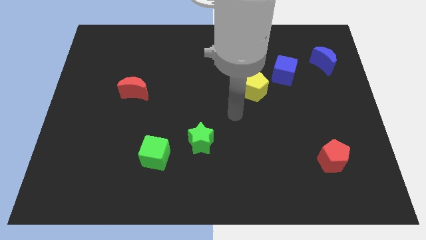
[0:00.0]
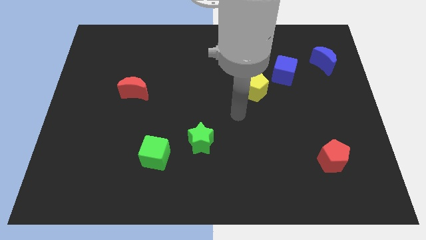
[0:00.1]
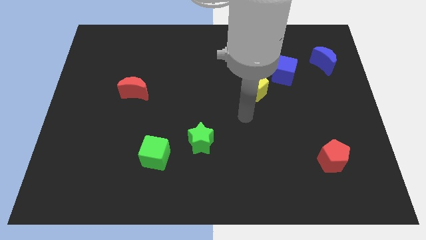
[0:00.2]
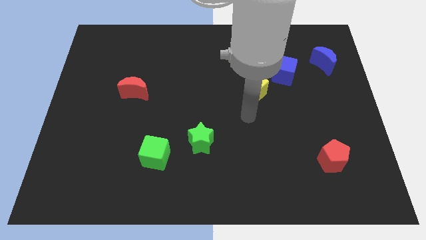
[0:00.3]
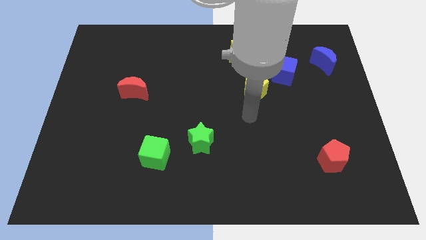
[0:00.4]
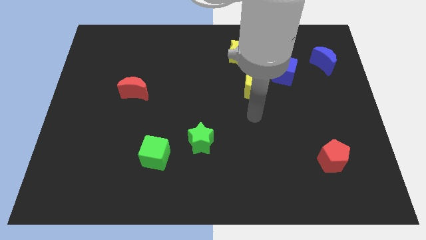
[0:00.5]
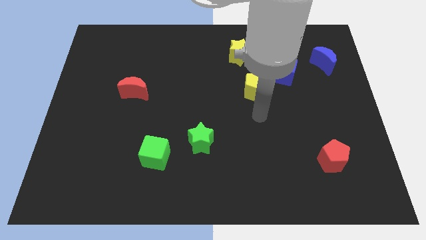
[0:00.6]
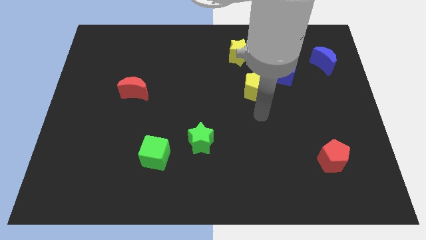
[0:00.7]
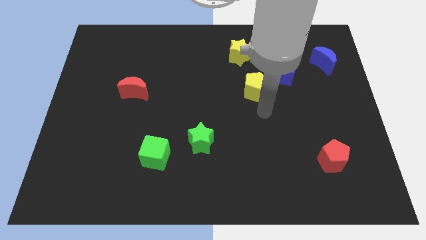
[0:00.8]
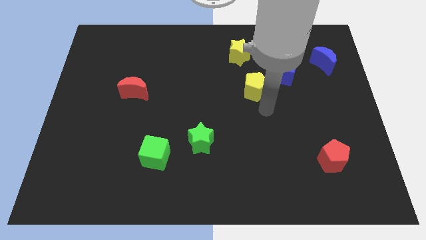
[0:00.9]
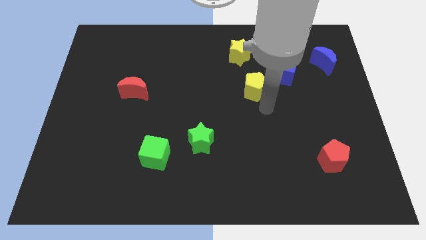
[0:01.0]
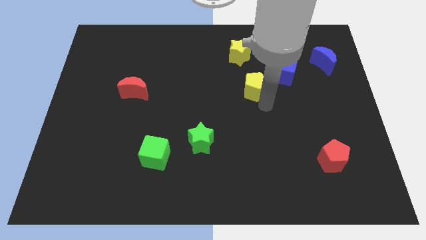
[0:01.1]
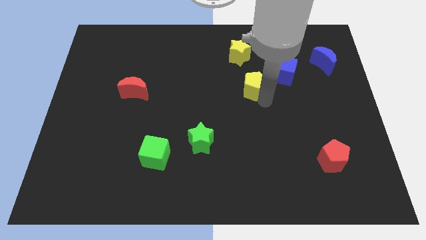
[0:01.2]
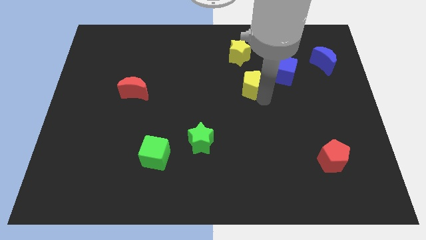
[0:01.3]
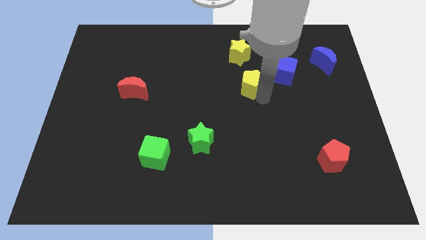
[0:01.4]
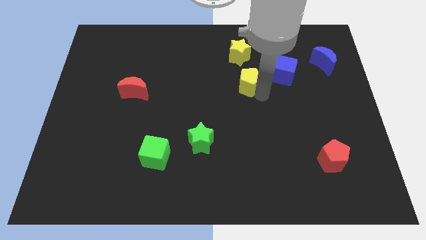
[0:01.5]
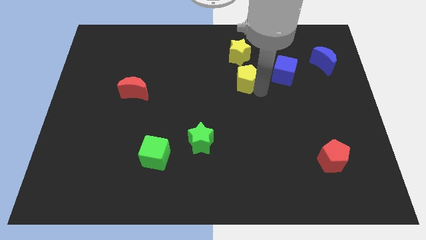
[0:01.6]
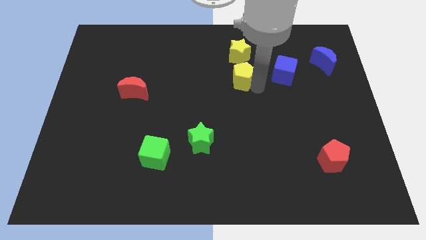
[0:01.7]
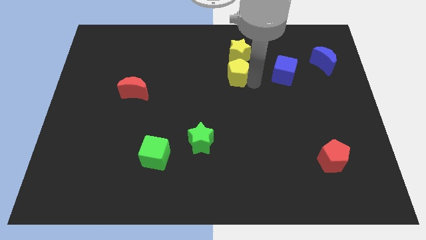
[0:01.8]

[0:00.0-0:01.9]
push yellow pentagon to the bottom of the yellow star

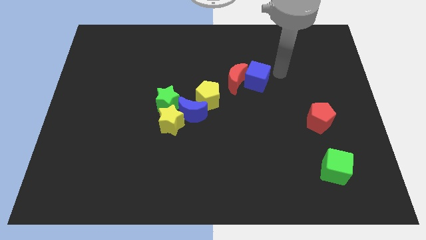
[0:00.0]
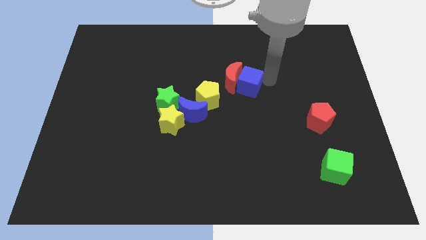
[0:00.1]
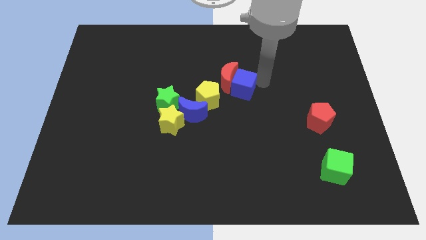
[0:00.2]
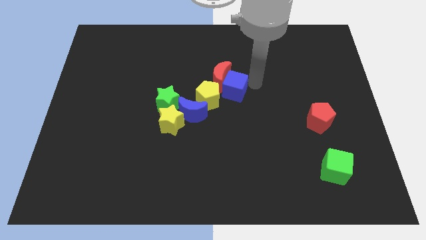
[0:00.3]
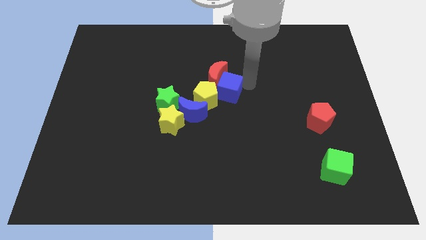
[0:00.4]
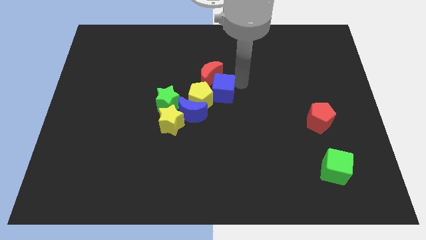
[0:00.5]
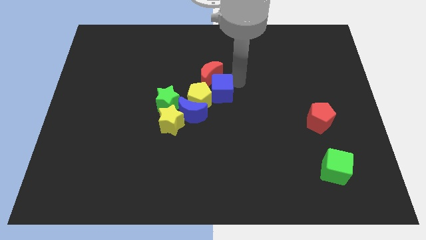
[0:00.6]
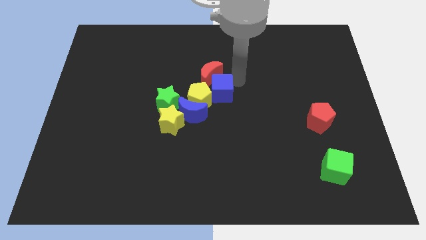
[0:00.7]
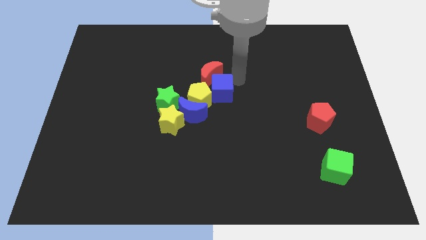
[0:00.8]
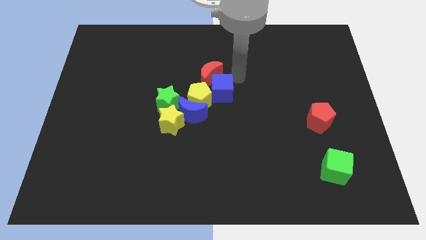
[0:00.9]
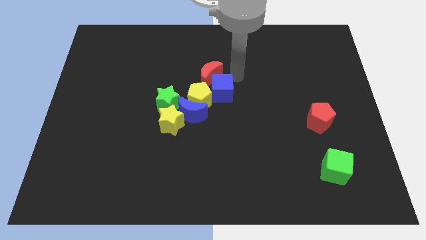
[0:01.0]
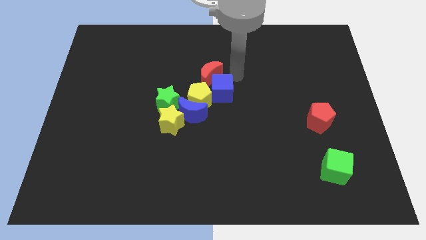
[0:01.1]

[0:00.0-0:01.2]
push the blue cube into the yellow pentagon

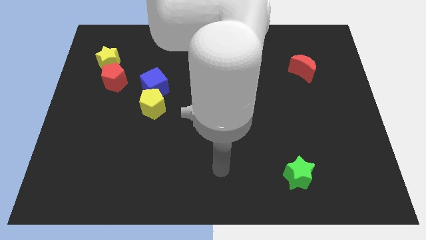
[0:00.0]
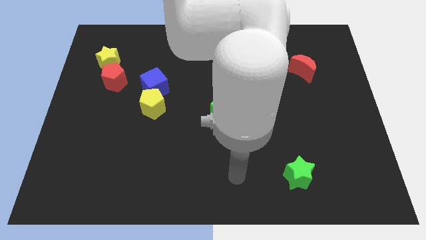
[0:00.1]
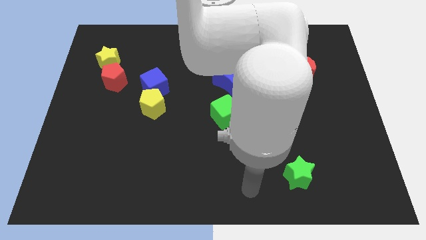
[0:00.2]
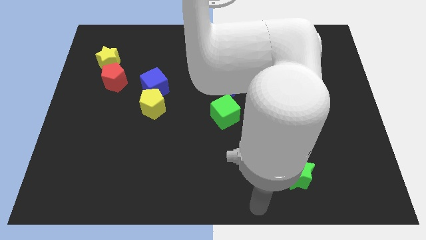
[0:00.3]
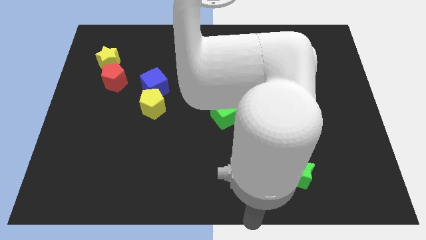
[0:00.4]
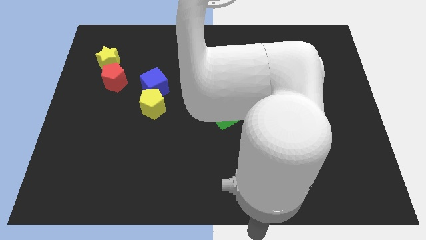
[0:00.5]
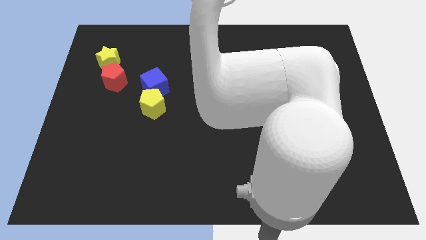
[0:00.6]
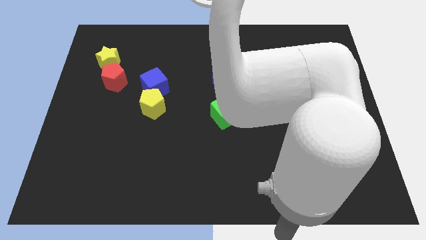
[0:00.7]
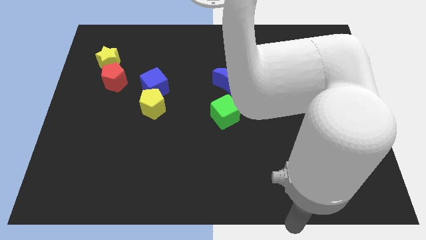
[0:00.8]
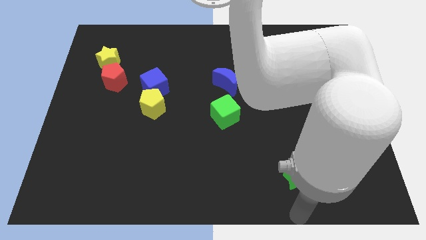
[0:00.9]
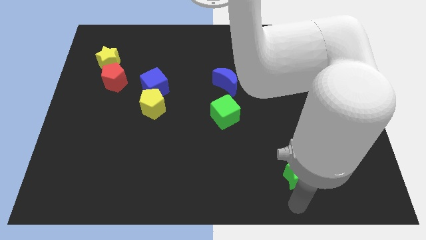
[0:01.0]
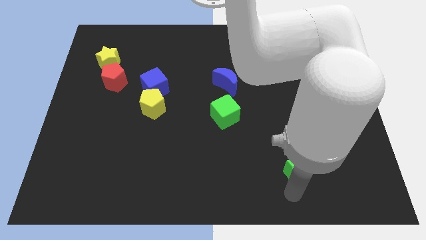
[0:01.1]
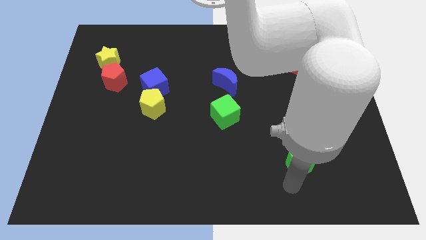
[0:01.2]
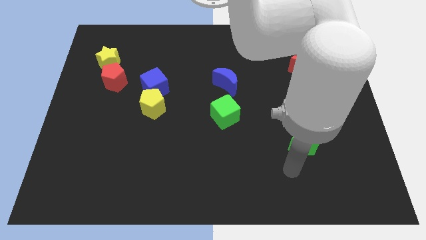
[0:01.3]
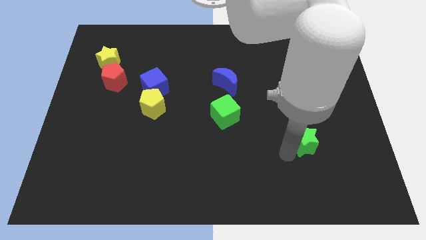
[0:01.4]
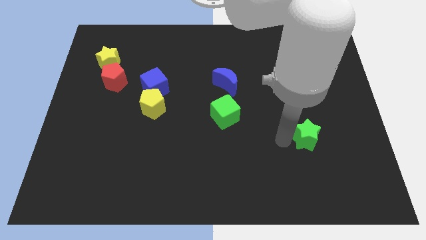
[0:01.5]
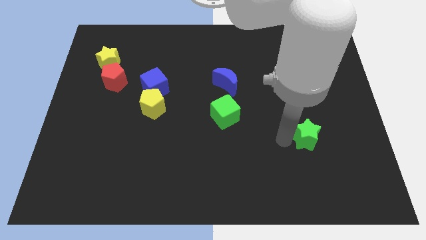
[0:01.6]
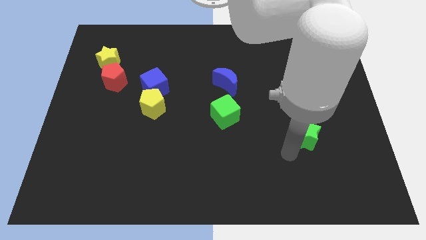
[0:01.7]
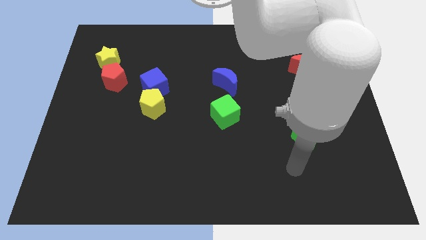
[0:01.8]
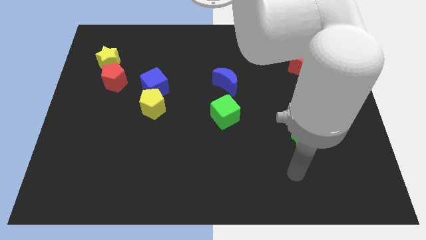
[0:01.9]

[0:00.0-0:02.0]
move the green star towards the top side

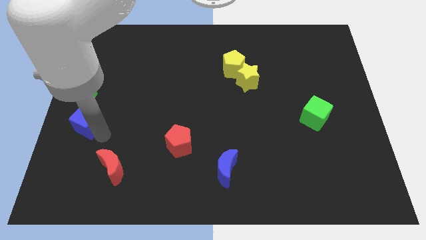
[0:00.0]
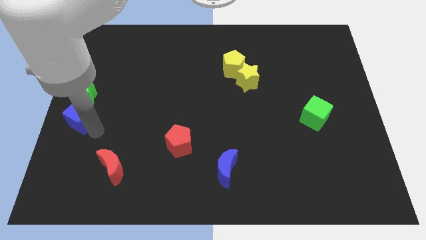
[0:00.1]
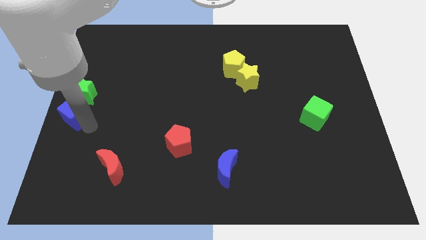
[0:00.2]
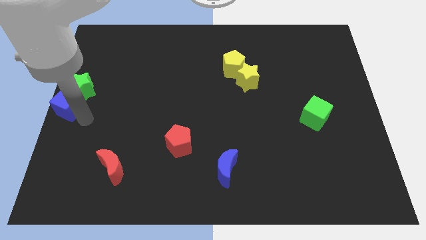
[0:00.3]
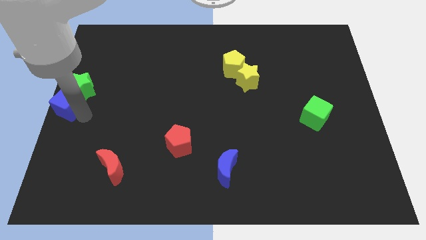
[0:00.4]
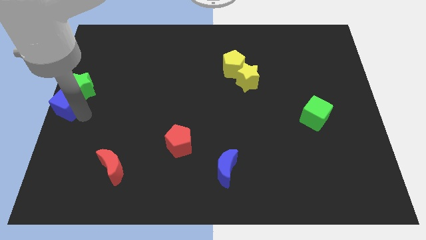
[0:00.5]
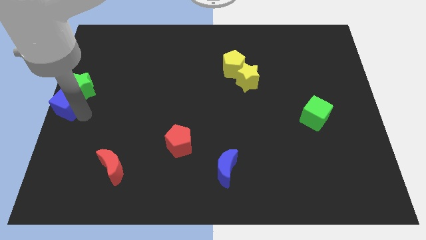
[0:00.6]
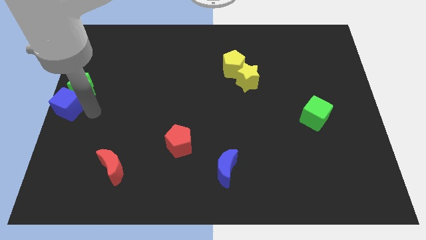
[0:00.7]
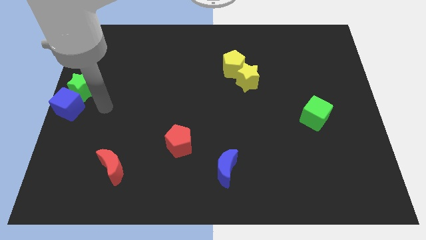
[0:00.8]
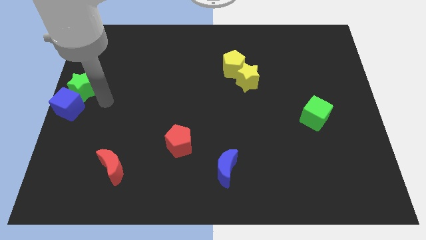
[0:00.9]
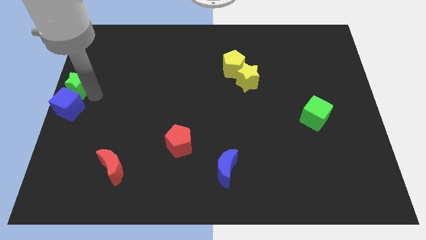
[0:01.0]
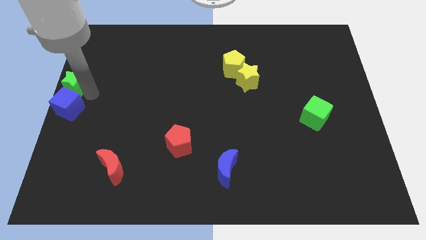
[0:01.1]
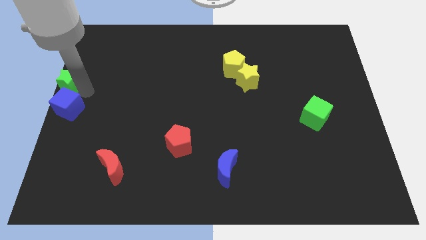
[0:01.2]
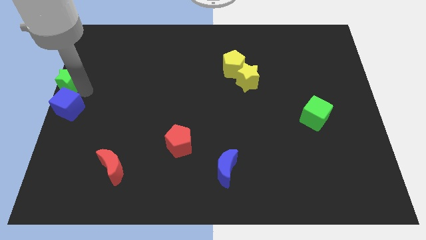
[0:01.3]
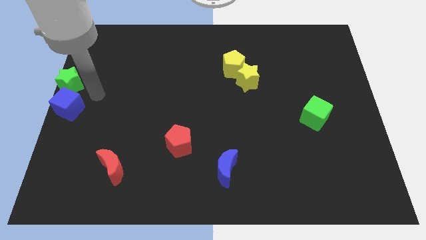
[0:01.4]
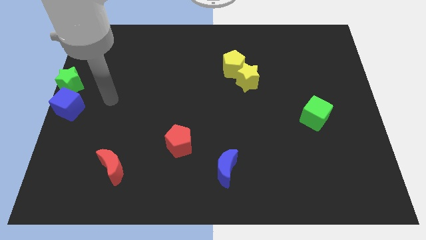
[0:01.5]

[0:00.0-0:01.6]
push blue cube to the left center of the board

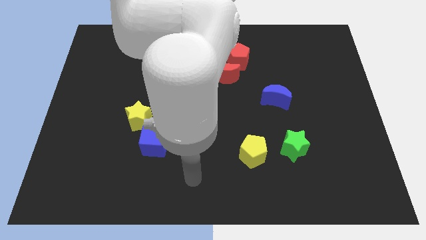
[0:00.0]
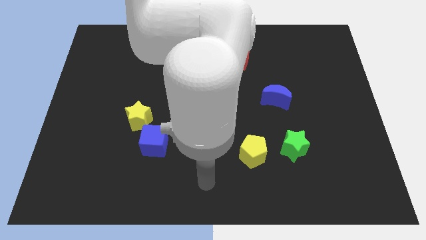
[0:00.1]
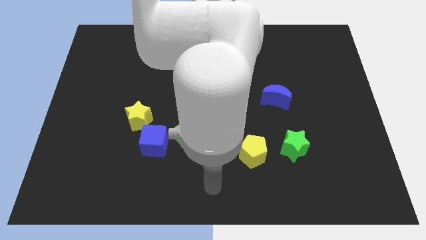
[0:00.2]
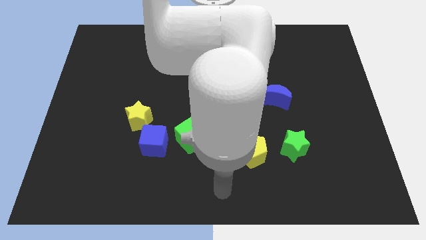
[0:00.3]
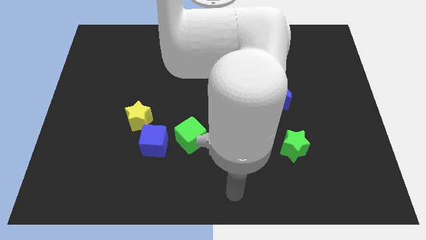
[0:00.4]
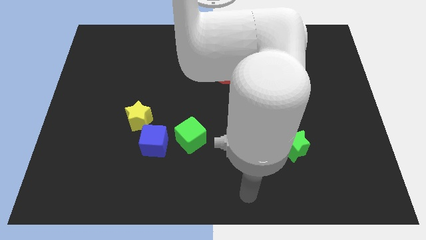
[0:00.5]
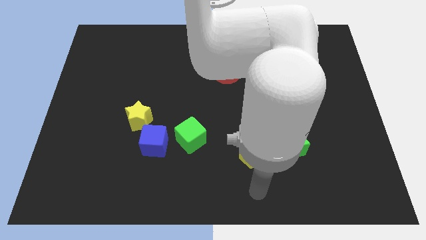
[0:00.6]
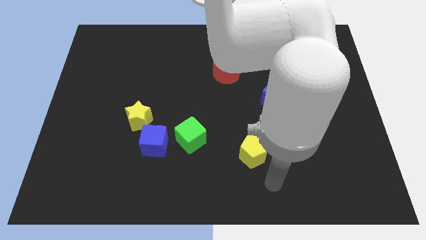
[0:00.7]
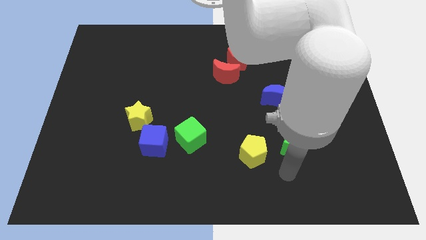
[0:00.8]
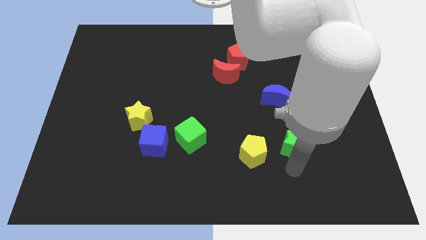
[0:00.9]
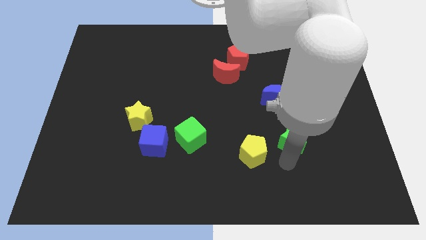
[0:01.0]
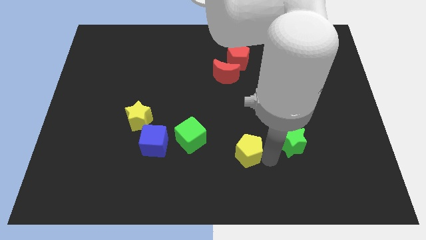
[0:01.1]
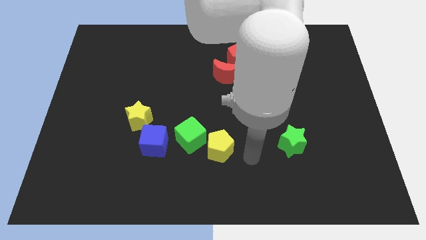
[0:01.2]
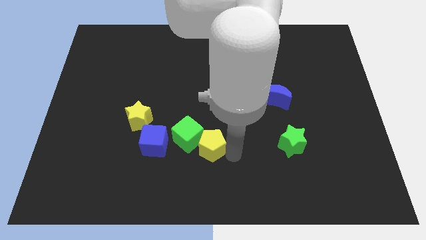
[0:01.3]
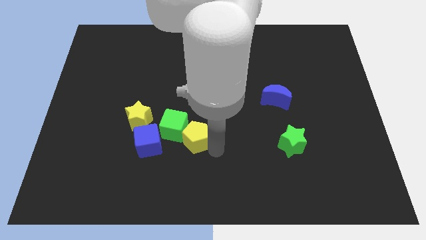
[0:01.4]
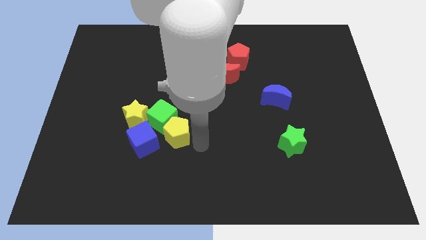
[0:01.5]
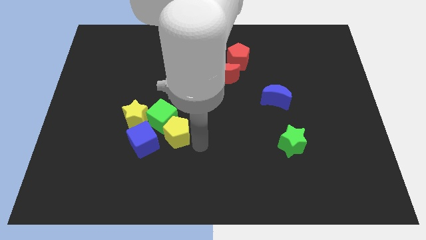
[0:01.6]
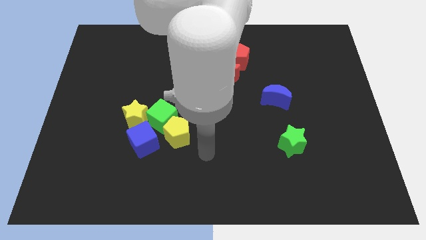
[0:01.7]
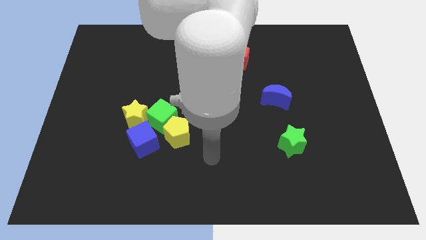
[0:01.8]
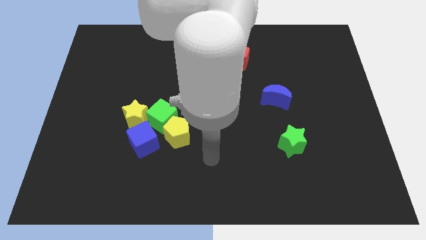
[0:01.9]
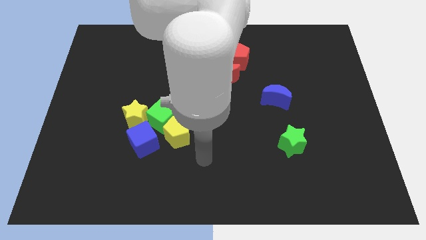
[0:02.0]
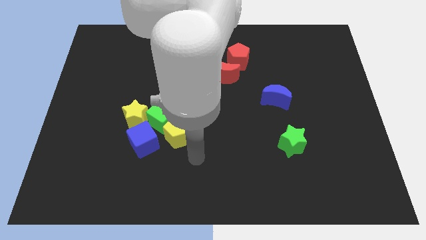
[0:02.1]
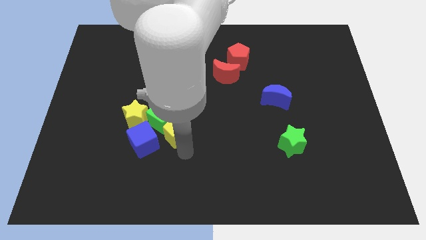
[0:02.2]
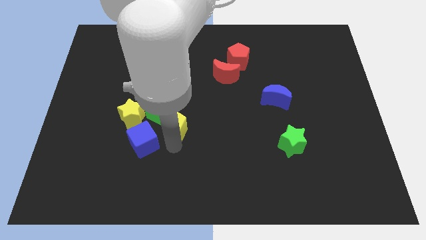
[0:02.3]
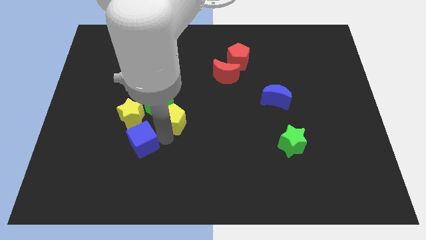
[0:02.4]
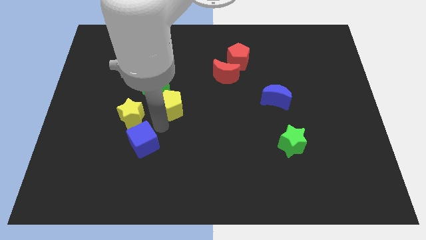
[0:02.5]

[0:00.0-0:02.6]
push the yellow pentagon below the green cube
